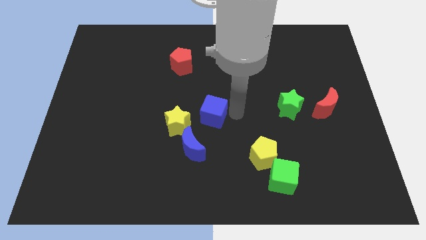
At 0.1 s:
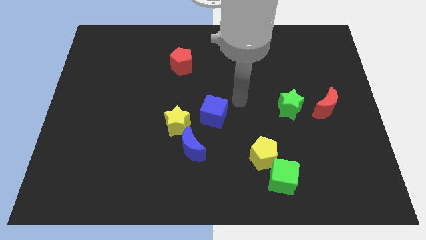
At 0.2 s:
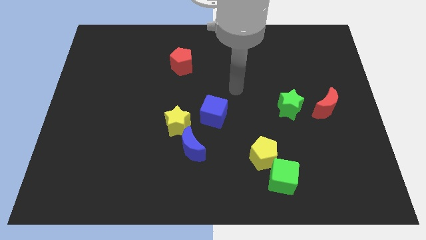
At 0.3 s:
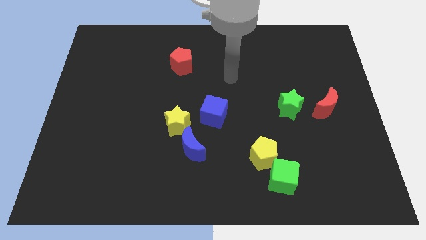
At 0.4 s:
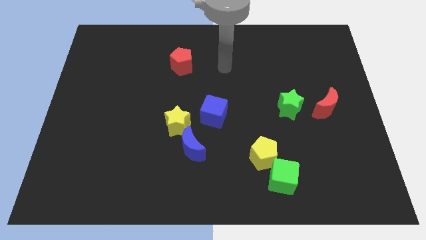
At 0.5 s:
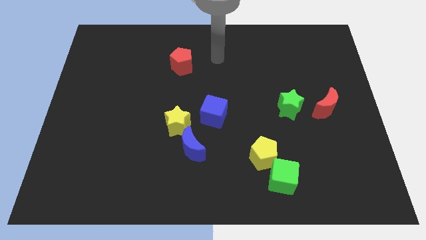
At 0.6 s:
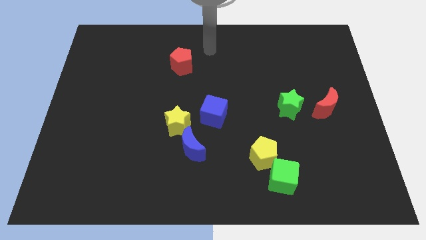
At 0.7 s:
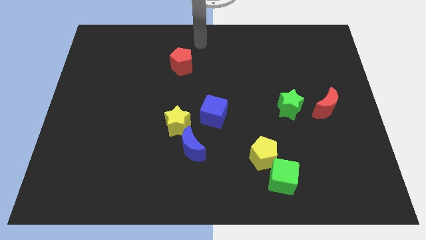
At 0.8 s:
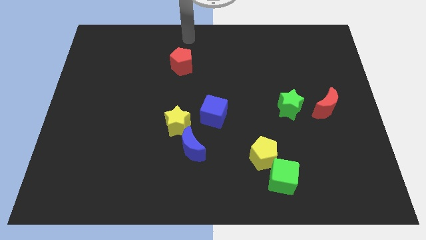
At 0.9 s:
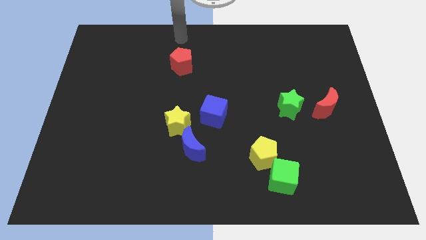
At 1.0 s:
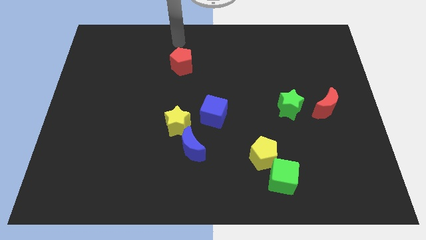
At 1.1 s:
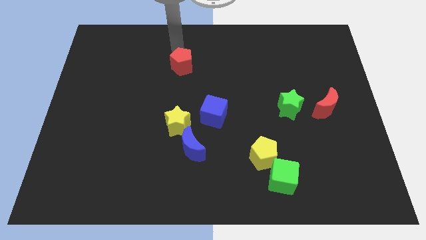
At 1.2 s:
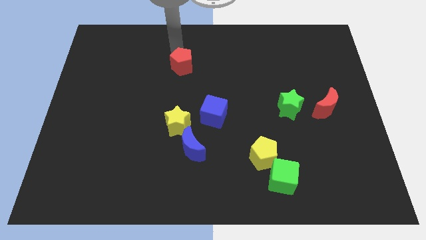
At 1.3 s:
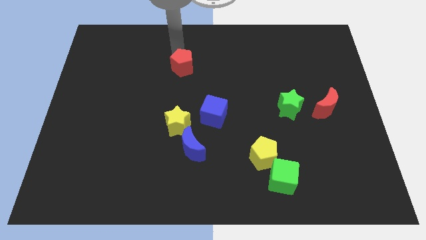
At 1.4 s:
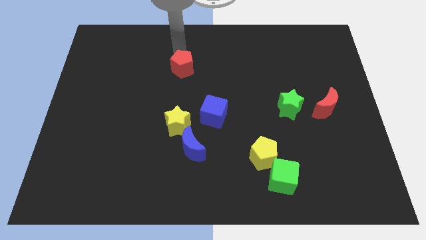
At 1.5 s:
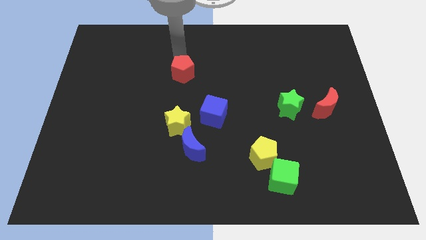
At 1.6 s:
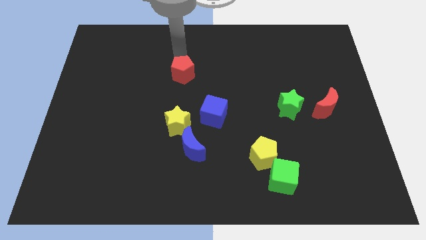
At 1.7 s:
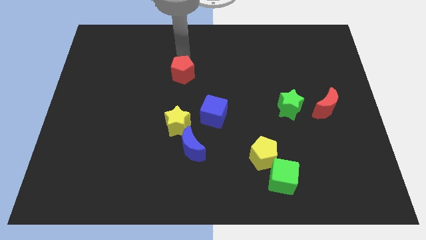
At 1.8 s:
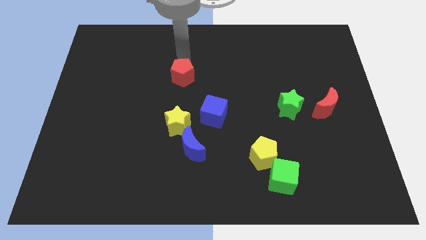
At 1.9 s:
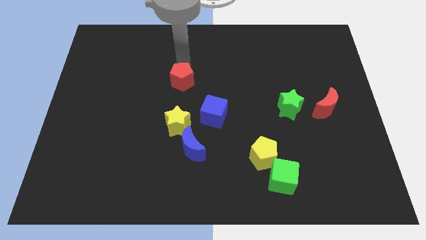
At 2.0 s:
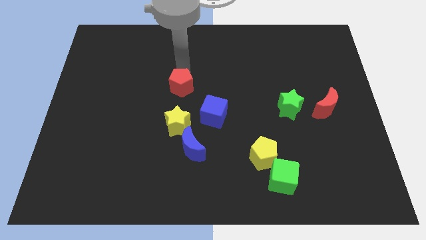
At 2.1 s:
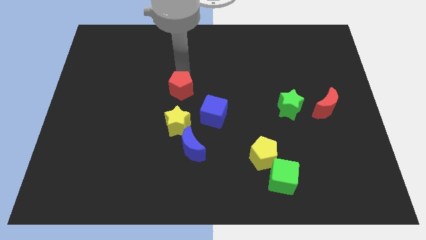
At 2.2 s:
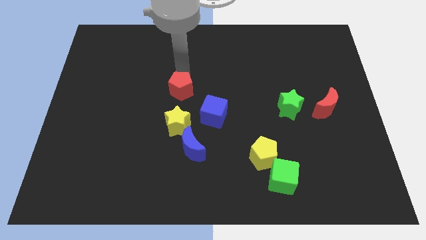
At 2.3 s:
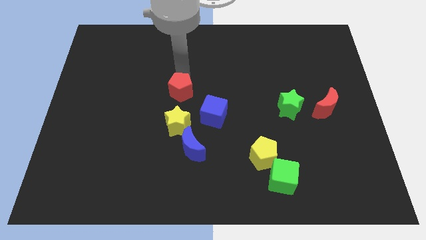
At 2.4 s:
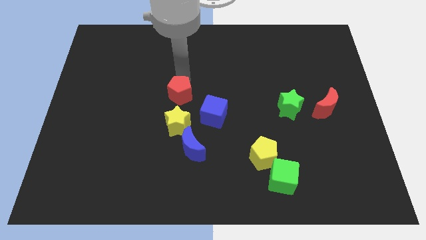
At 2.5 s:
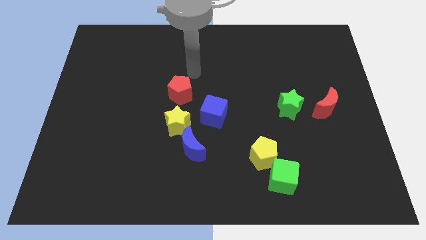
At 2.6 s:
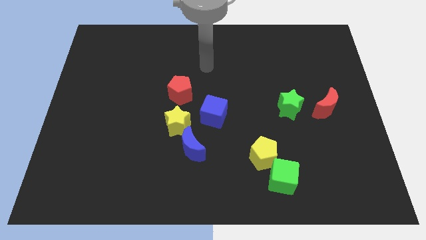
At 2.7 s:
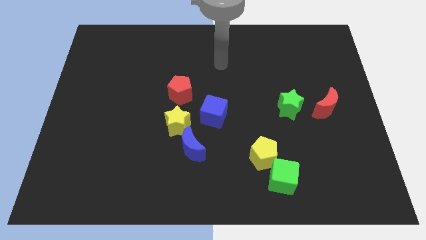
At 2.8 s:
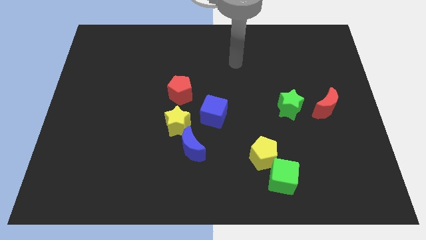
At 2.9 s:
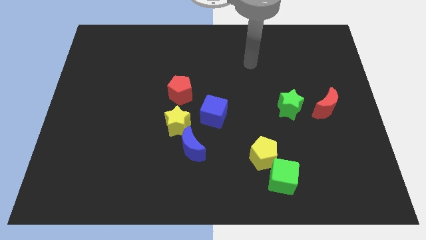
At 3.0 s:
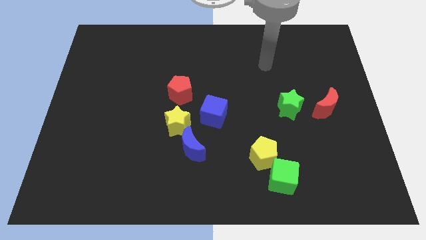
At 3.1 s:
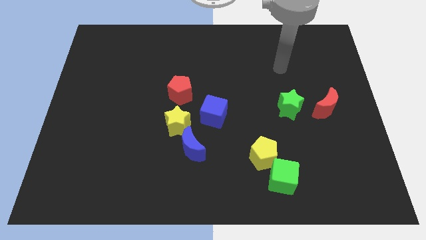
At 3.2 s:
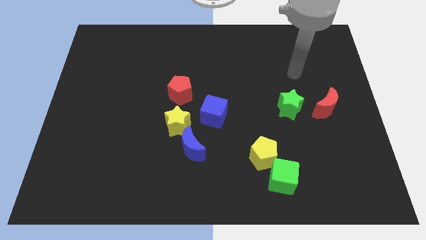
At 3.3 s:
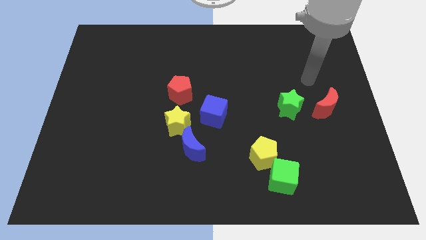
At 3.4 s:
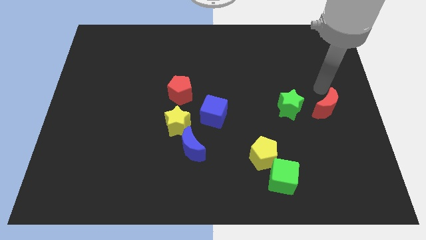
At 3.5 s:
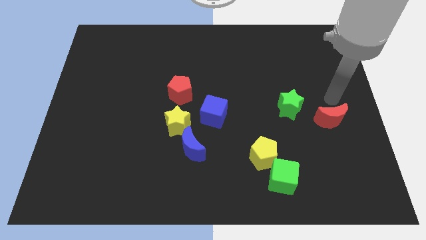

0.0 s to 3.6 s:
slide the red pentagon above the yellow star

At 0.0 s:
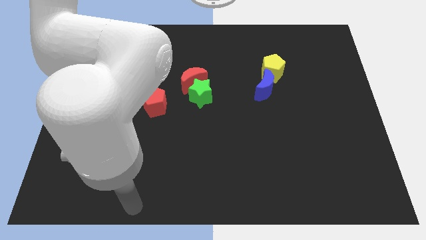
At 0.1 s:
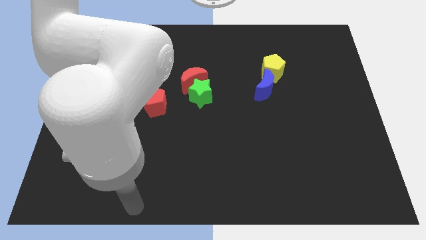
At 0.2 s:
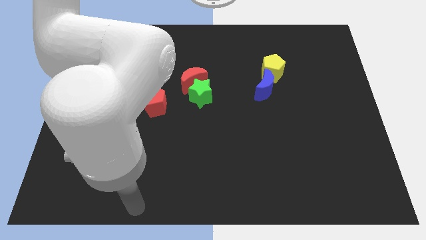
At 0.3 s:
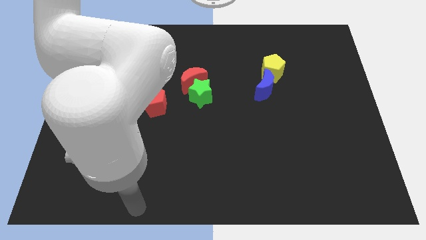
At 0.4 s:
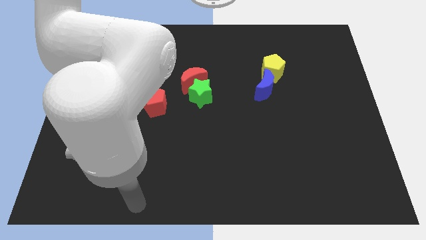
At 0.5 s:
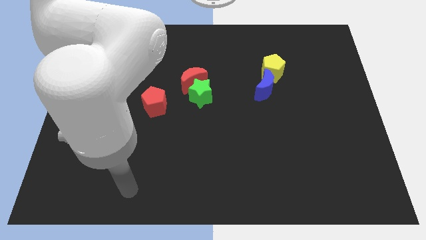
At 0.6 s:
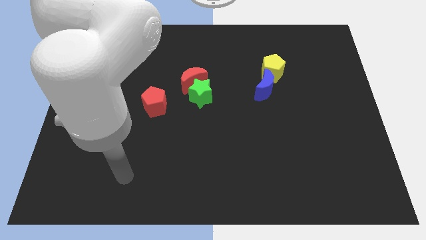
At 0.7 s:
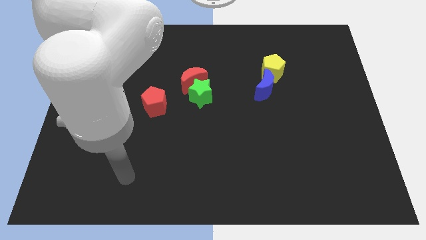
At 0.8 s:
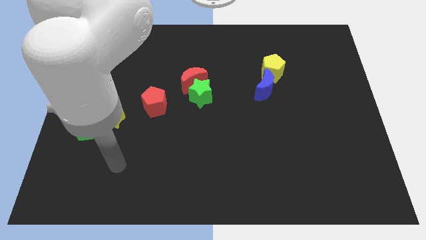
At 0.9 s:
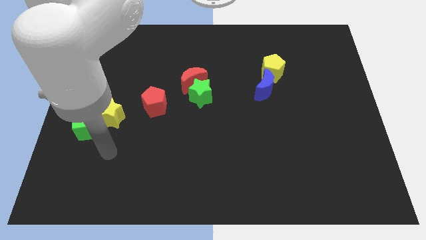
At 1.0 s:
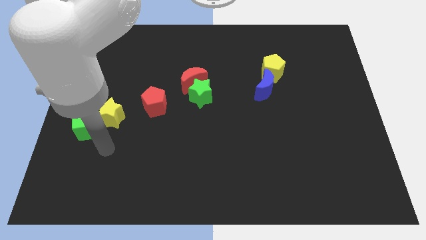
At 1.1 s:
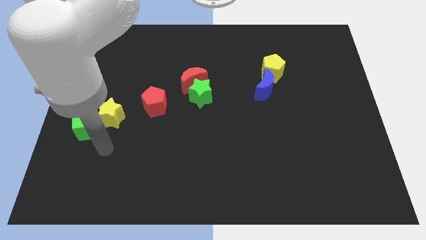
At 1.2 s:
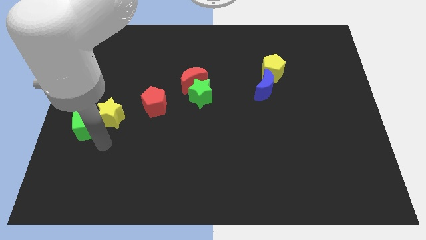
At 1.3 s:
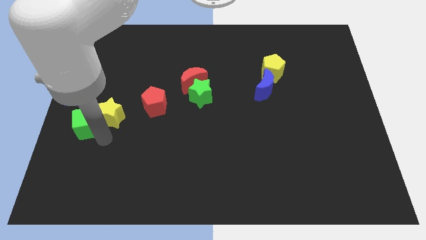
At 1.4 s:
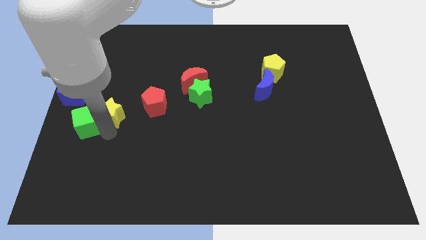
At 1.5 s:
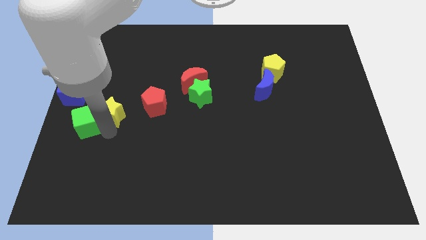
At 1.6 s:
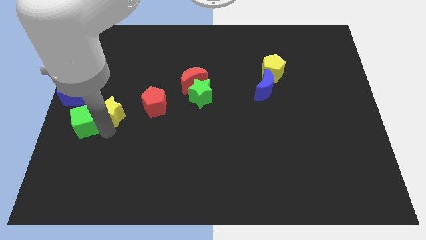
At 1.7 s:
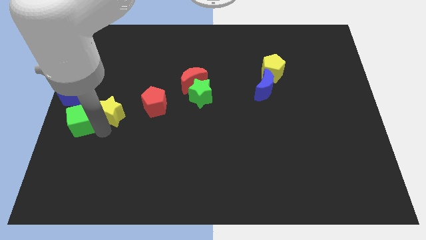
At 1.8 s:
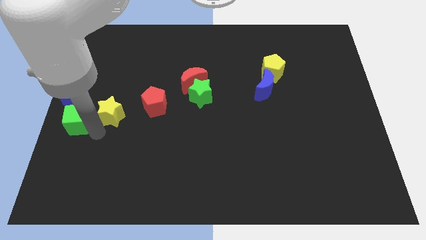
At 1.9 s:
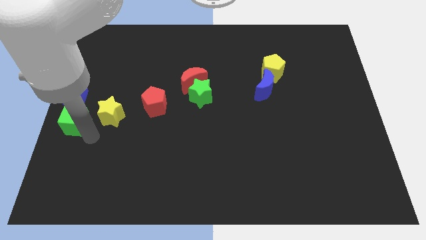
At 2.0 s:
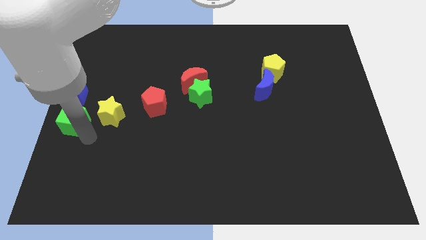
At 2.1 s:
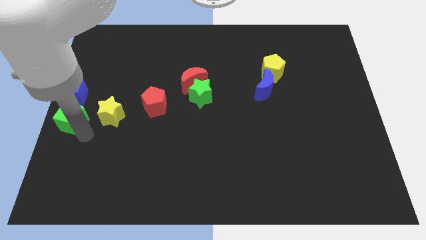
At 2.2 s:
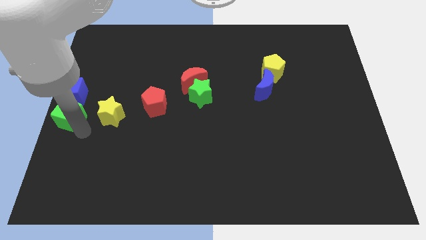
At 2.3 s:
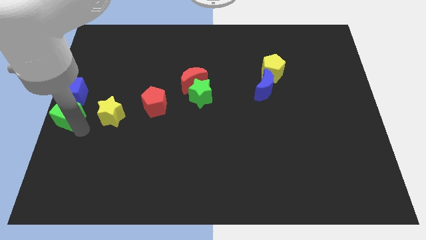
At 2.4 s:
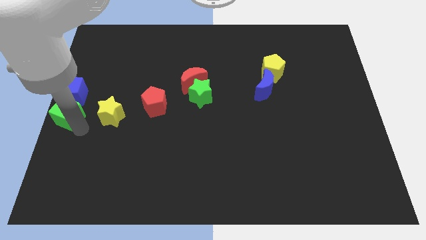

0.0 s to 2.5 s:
put the green cube below the blue cube

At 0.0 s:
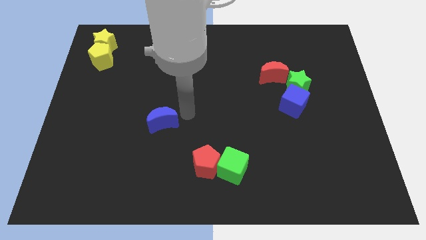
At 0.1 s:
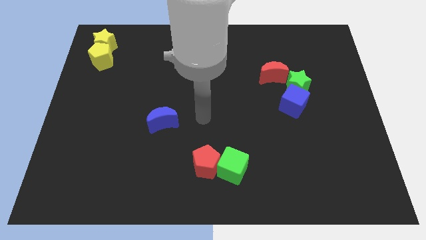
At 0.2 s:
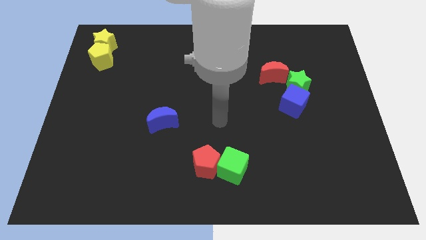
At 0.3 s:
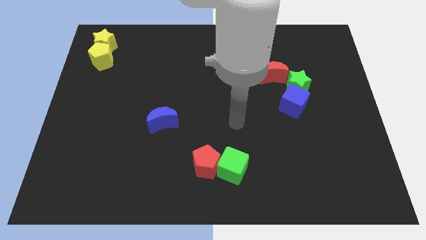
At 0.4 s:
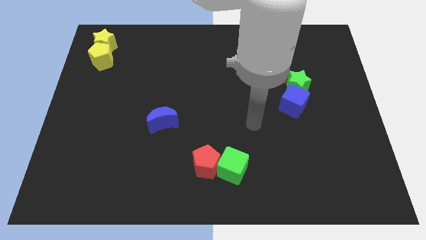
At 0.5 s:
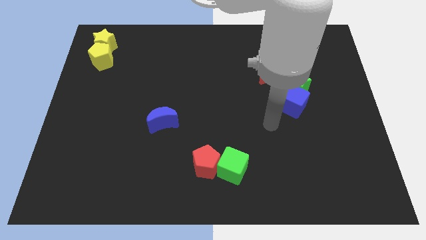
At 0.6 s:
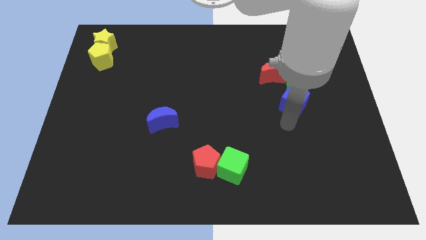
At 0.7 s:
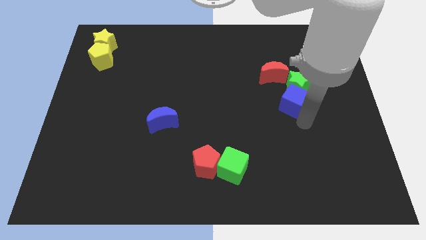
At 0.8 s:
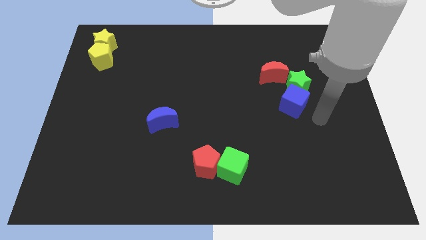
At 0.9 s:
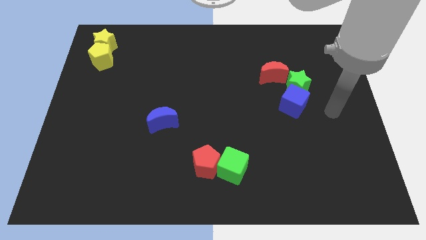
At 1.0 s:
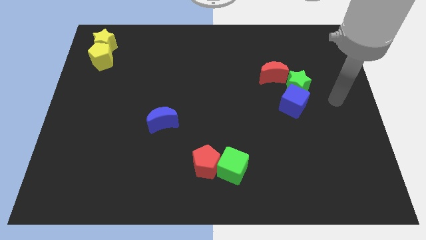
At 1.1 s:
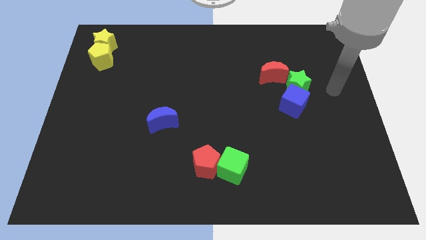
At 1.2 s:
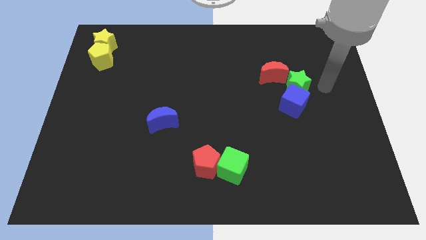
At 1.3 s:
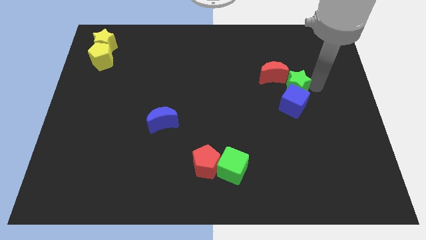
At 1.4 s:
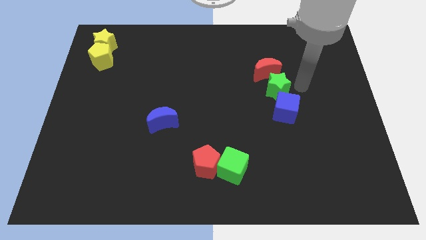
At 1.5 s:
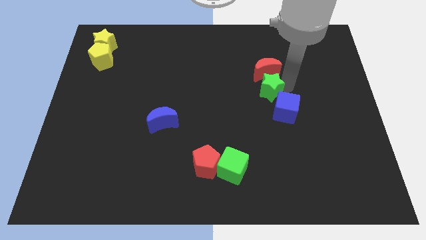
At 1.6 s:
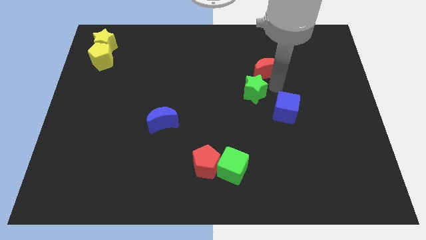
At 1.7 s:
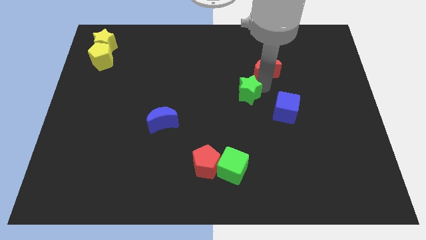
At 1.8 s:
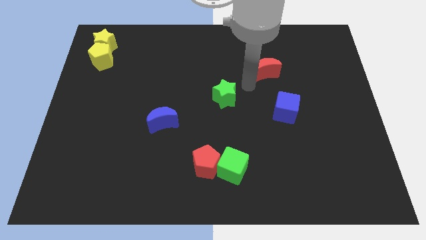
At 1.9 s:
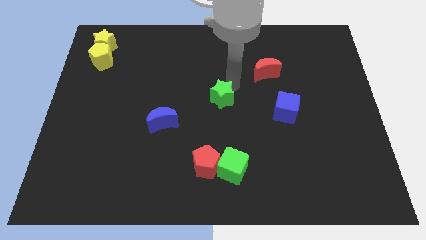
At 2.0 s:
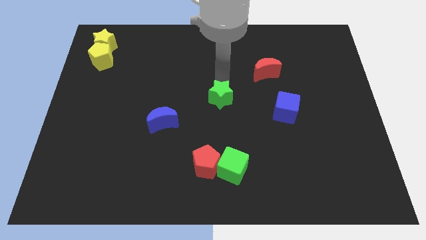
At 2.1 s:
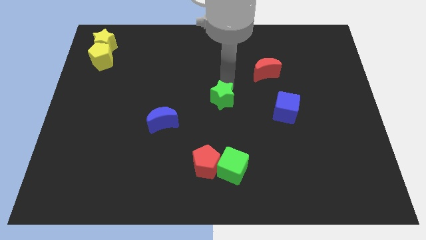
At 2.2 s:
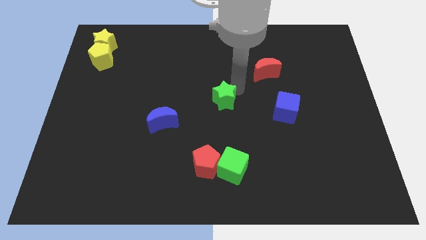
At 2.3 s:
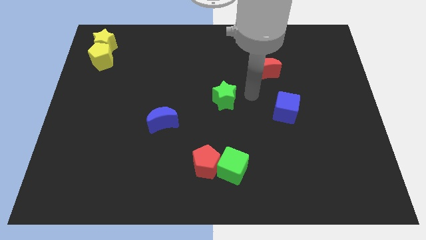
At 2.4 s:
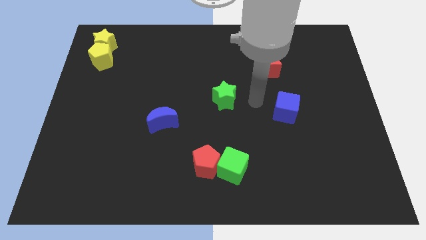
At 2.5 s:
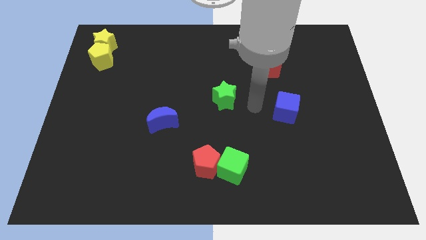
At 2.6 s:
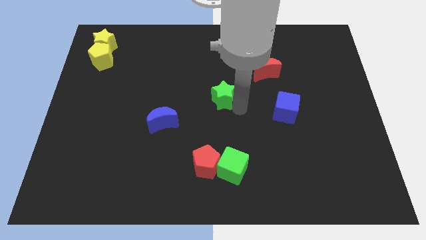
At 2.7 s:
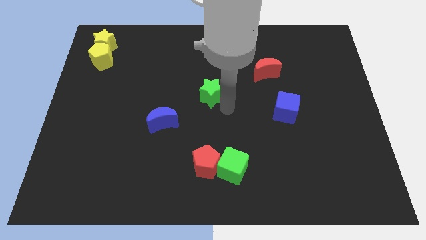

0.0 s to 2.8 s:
place the green star in between the blue moon and the red moon

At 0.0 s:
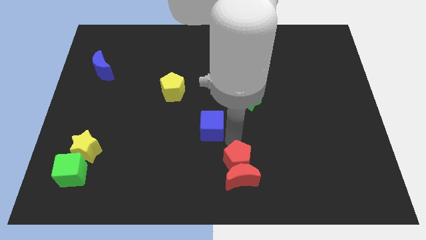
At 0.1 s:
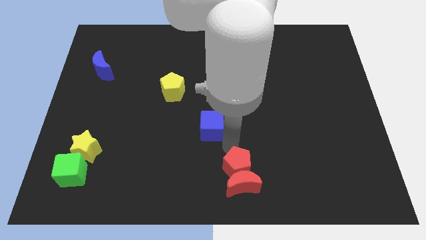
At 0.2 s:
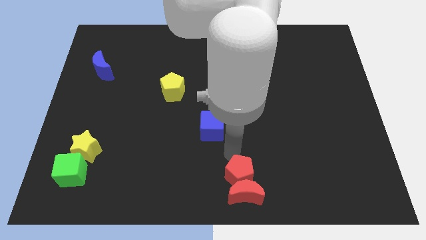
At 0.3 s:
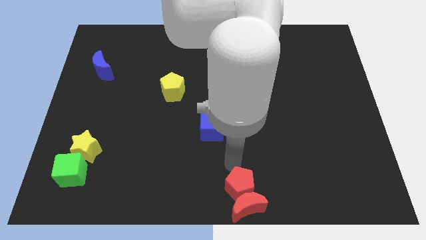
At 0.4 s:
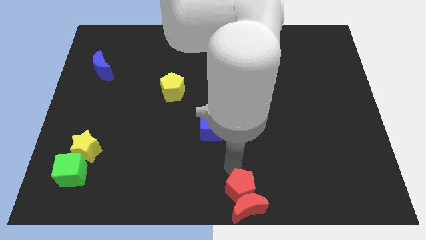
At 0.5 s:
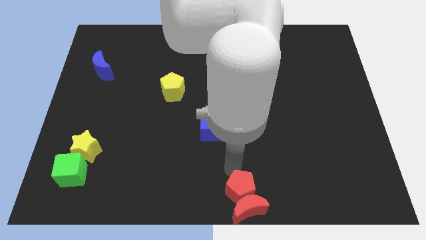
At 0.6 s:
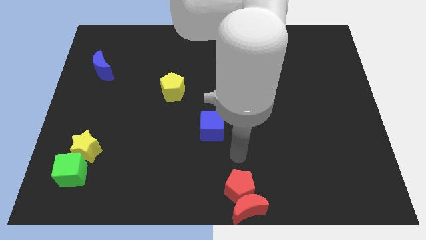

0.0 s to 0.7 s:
push red pentagon downwards
